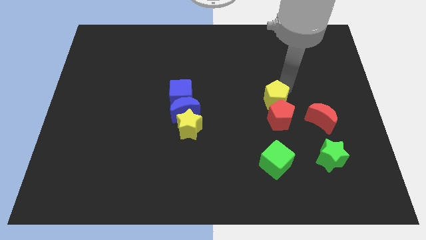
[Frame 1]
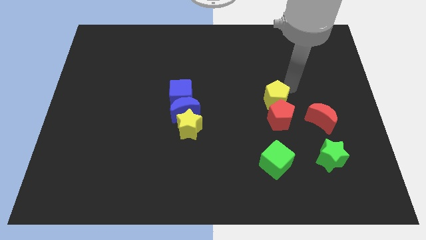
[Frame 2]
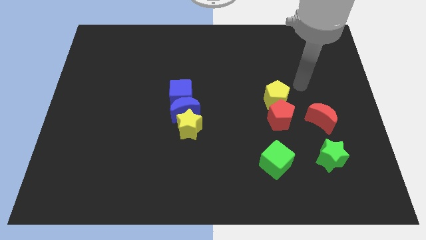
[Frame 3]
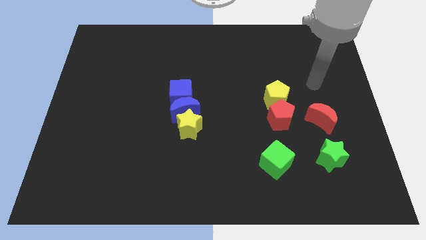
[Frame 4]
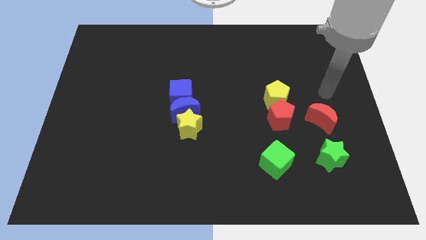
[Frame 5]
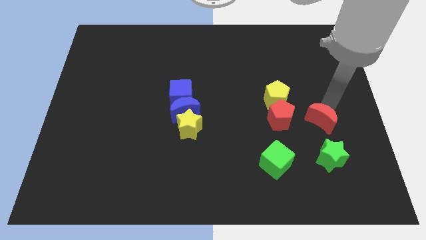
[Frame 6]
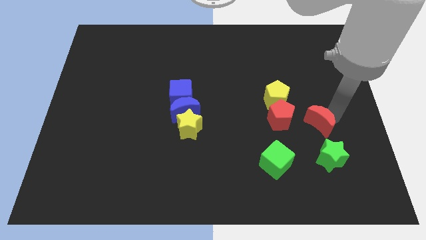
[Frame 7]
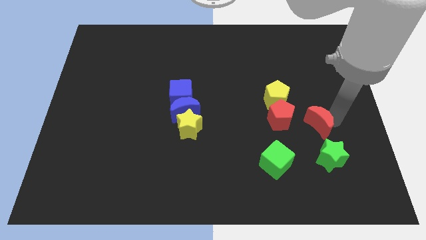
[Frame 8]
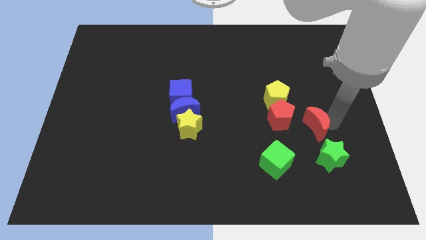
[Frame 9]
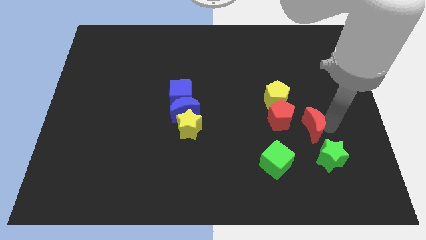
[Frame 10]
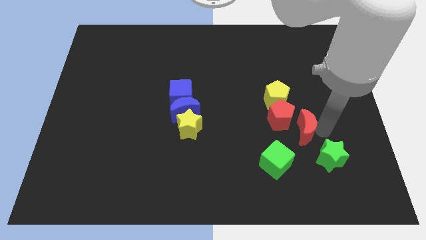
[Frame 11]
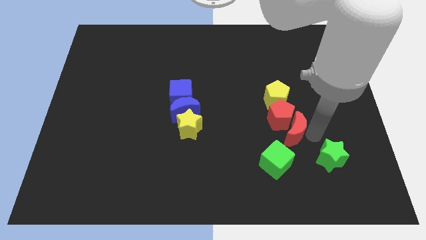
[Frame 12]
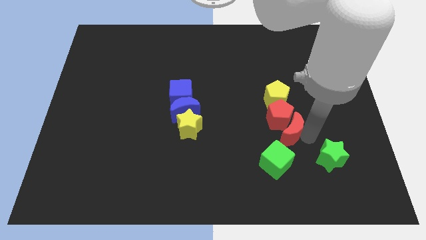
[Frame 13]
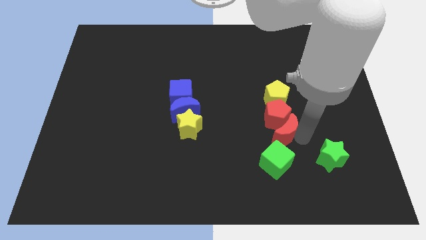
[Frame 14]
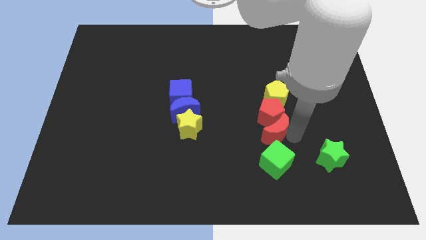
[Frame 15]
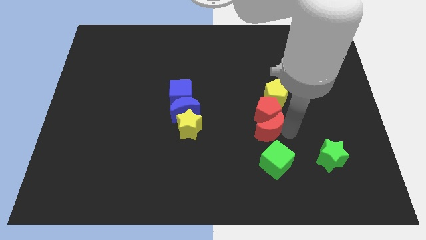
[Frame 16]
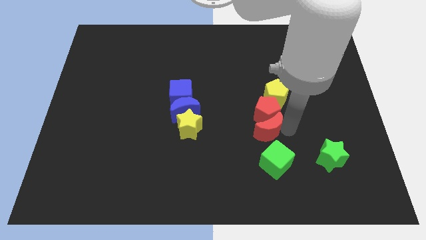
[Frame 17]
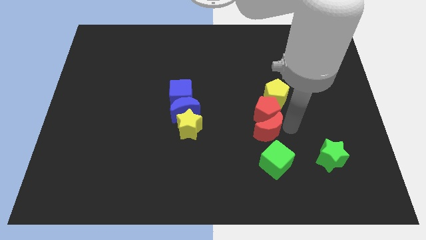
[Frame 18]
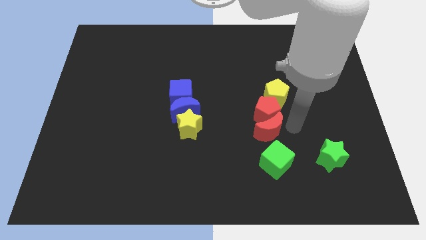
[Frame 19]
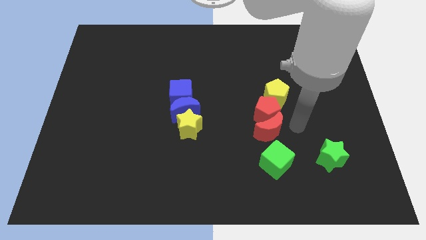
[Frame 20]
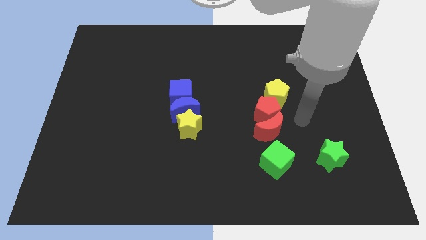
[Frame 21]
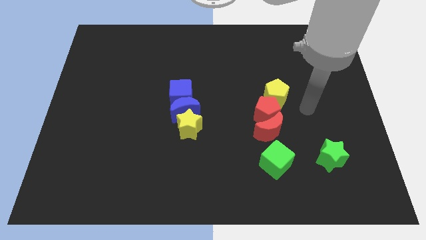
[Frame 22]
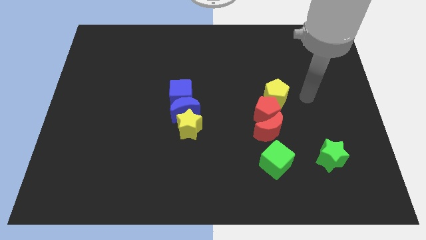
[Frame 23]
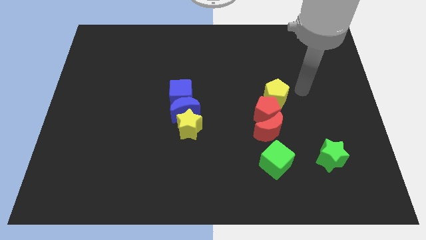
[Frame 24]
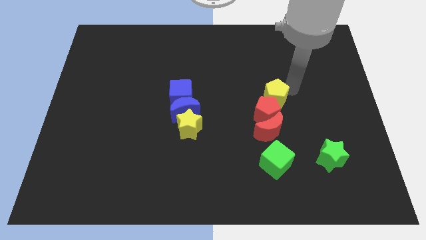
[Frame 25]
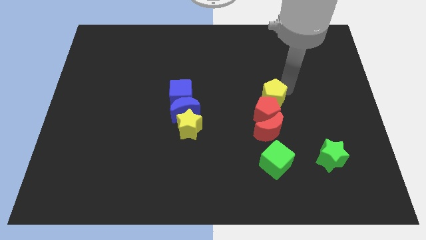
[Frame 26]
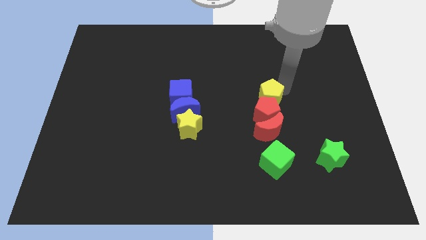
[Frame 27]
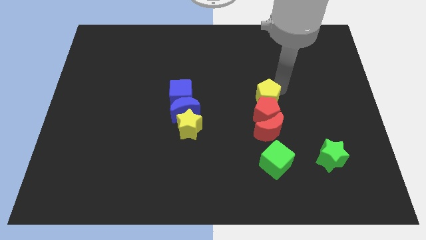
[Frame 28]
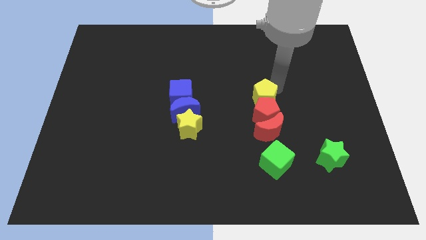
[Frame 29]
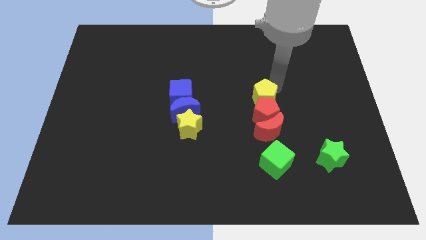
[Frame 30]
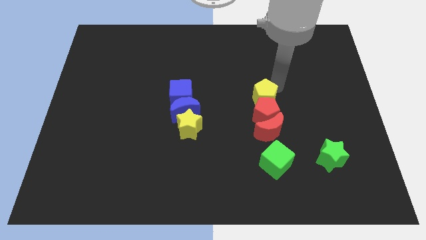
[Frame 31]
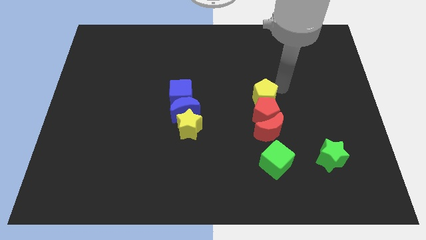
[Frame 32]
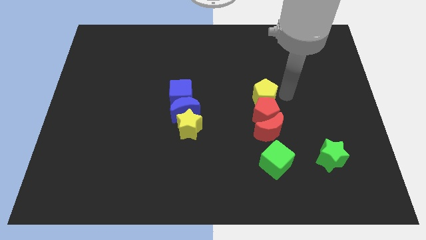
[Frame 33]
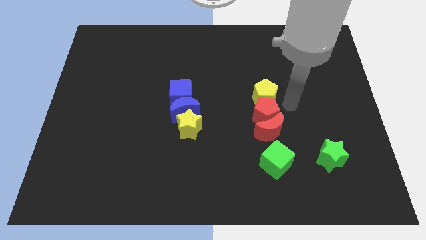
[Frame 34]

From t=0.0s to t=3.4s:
place the red moon at the bottom of the red pentagon

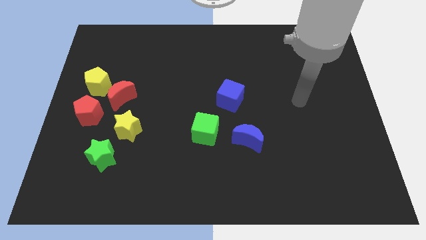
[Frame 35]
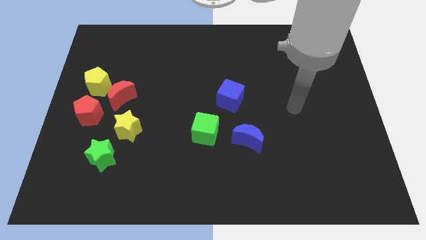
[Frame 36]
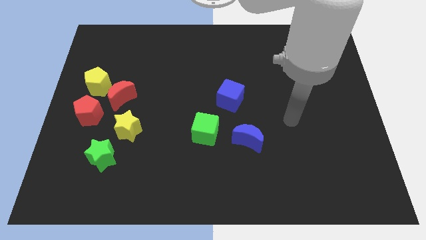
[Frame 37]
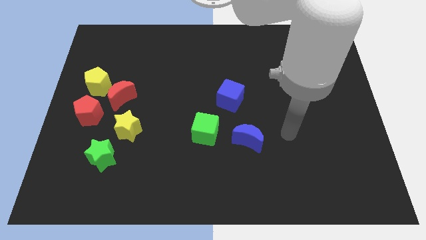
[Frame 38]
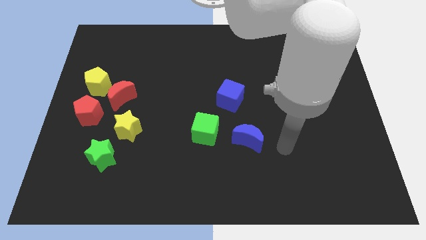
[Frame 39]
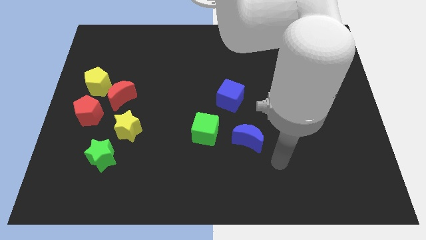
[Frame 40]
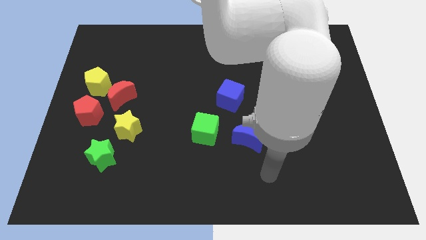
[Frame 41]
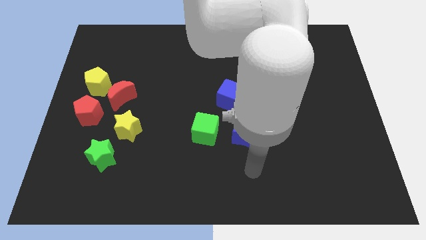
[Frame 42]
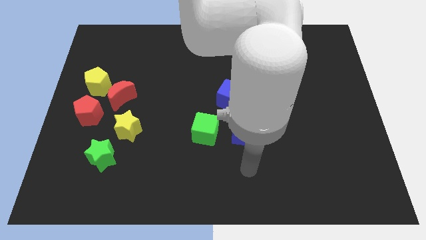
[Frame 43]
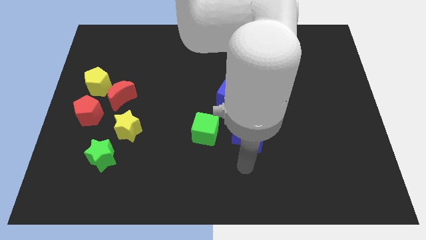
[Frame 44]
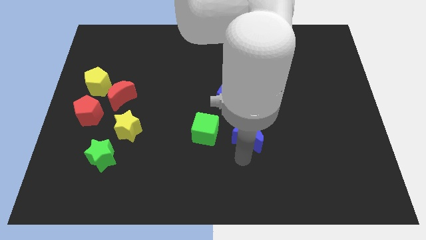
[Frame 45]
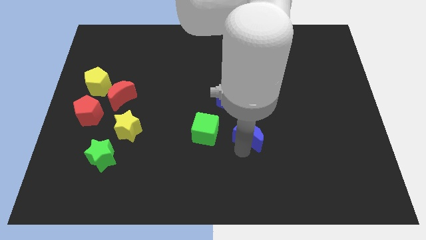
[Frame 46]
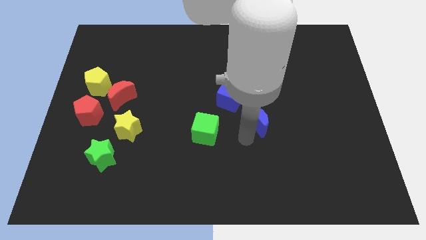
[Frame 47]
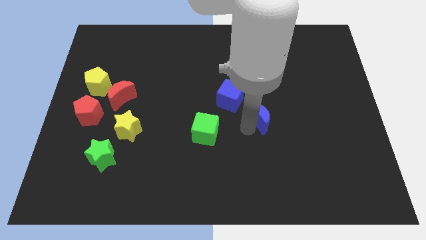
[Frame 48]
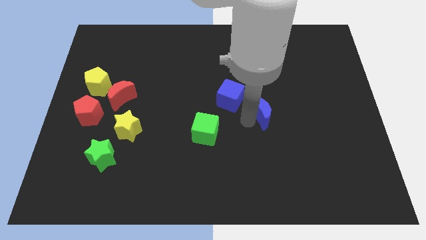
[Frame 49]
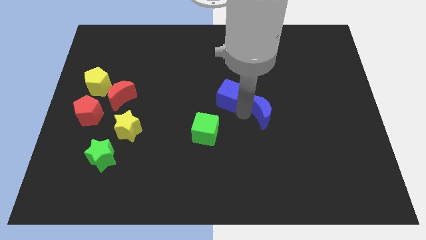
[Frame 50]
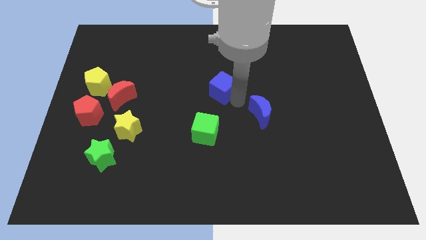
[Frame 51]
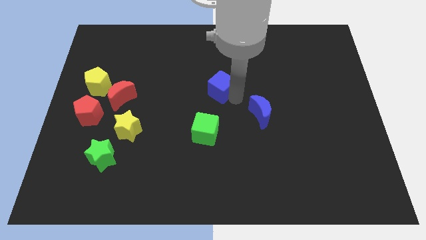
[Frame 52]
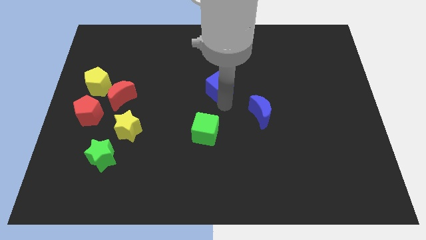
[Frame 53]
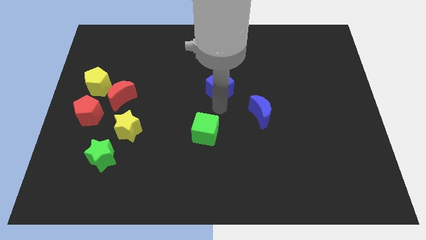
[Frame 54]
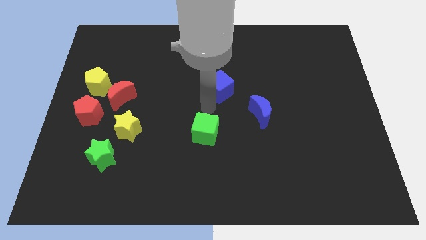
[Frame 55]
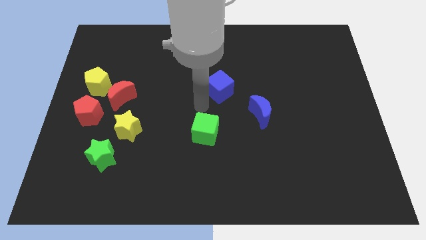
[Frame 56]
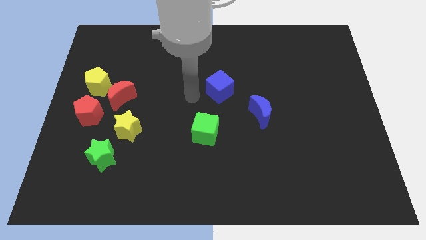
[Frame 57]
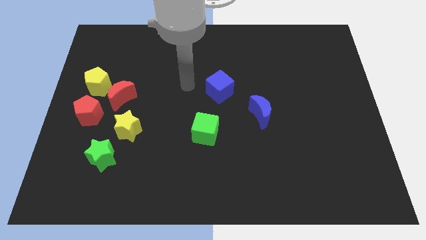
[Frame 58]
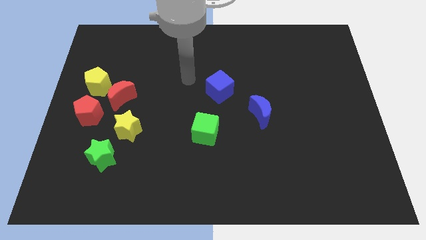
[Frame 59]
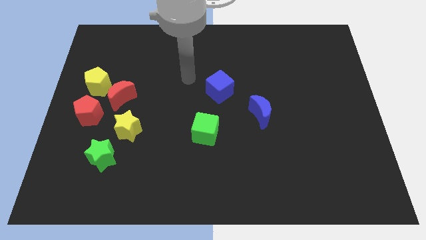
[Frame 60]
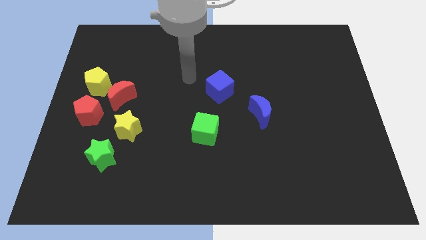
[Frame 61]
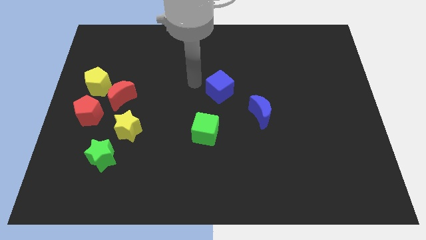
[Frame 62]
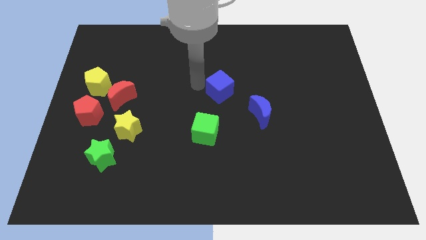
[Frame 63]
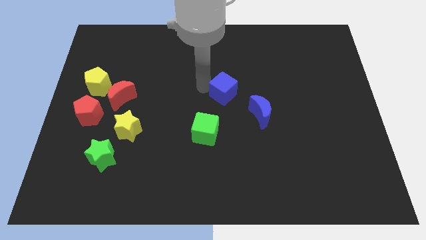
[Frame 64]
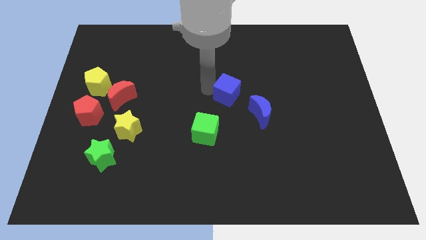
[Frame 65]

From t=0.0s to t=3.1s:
move blue moon beside blue cube

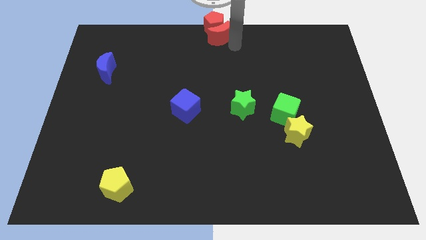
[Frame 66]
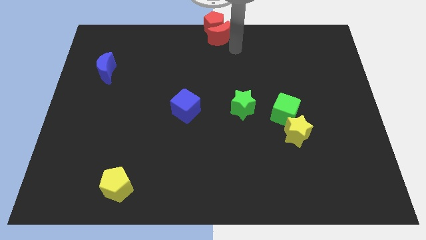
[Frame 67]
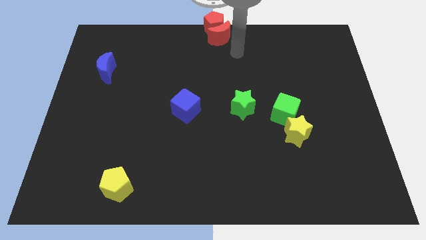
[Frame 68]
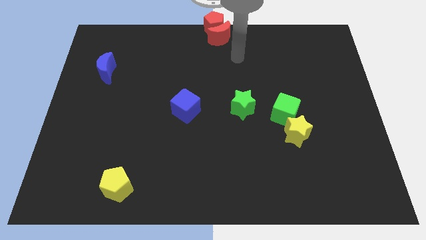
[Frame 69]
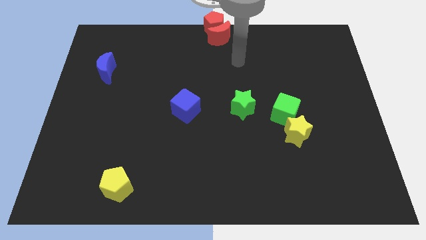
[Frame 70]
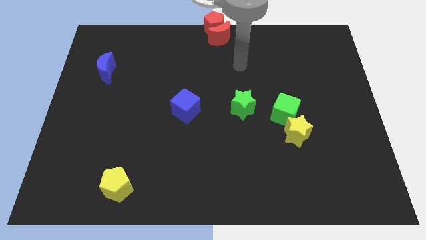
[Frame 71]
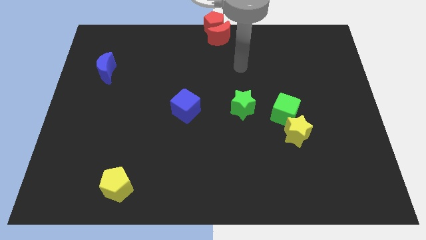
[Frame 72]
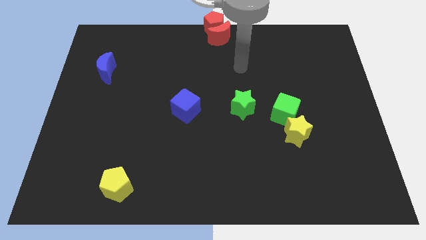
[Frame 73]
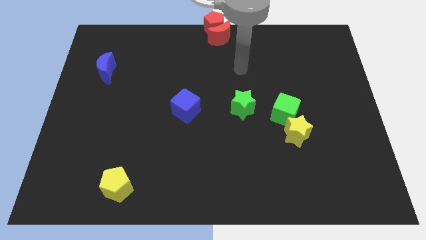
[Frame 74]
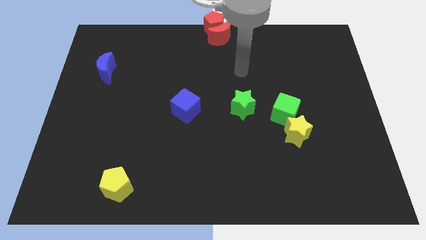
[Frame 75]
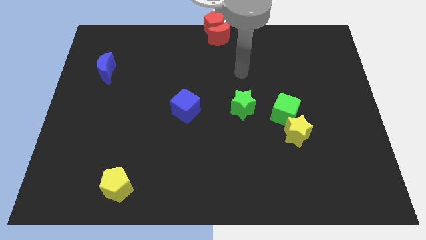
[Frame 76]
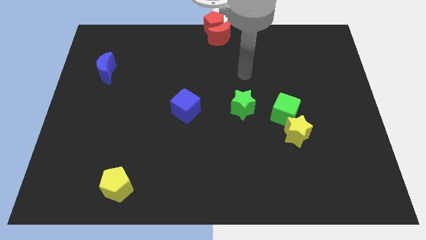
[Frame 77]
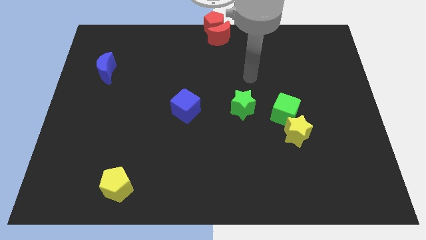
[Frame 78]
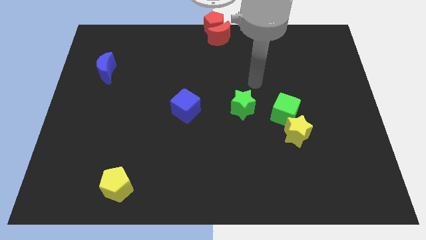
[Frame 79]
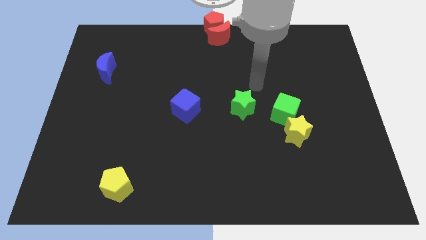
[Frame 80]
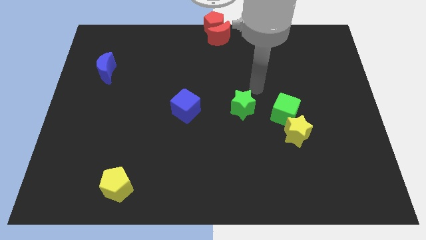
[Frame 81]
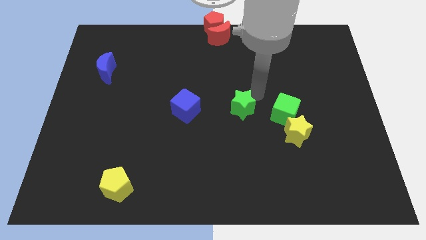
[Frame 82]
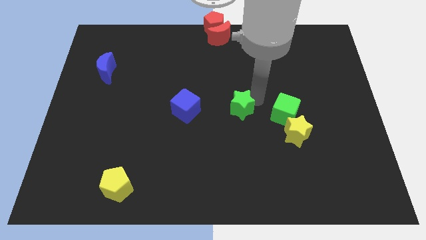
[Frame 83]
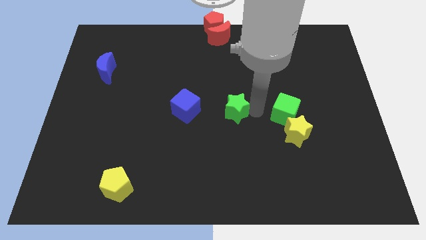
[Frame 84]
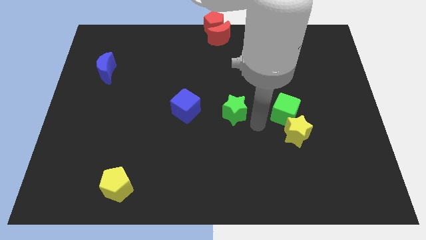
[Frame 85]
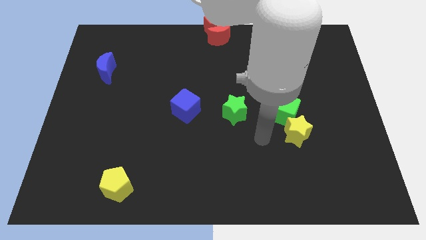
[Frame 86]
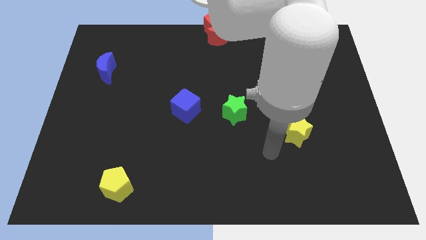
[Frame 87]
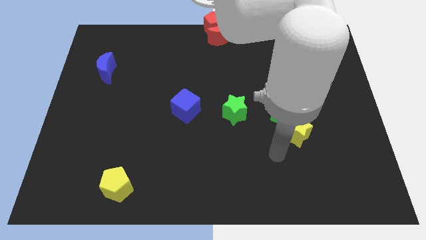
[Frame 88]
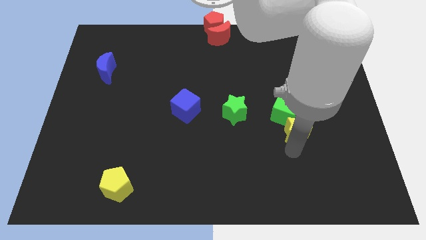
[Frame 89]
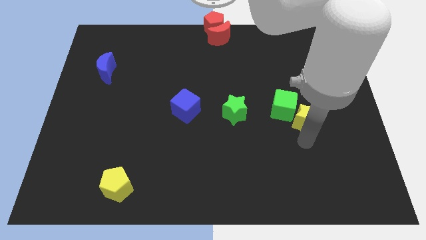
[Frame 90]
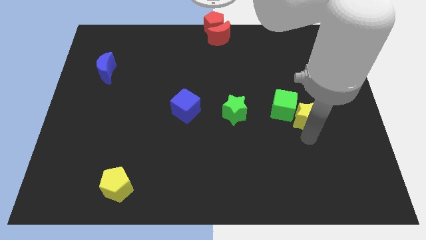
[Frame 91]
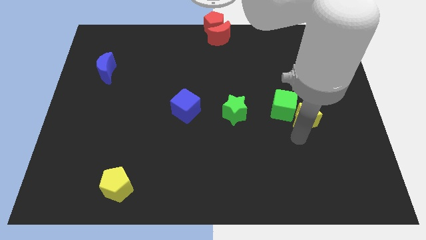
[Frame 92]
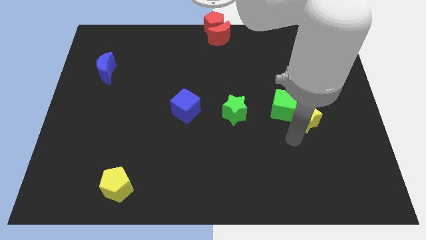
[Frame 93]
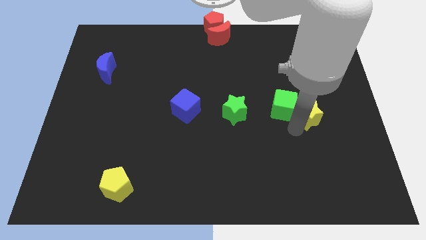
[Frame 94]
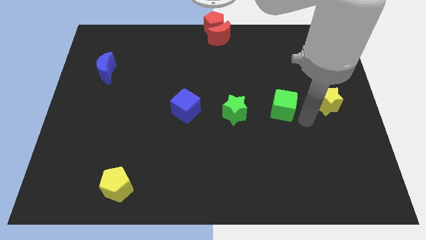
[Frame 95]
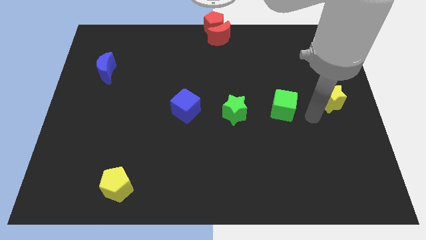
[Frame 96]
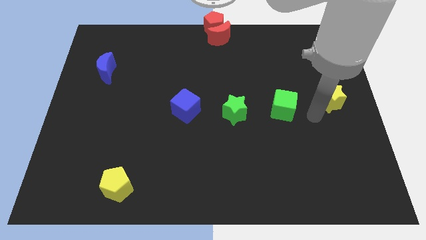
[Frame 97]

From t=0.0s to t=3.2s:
push the stars in different directions
